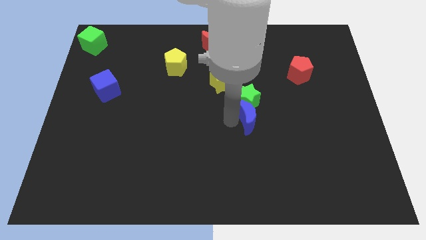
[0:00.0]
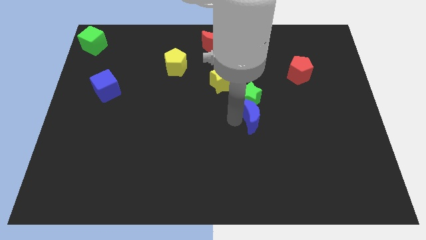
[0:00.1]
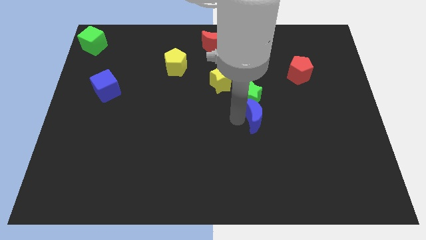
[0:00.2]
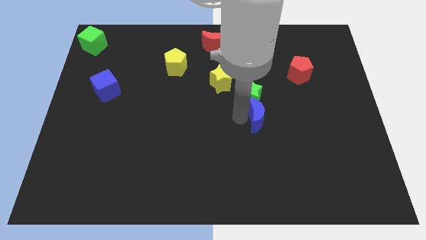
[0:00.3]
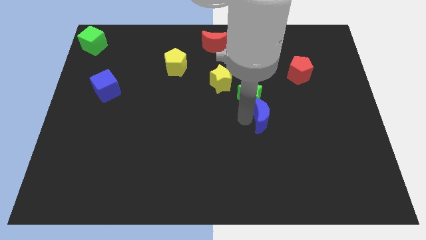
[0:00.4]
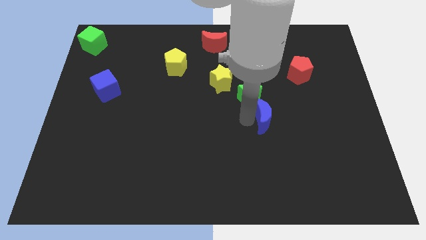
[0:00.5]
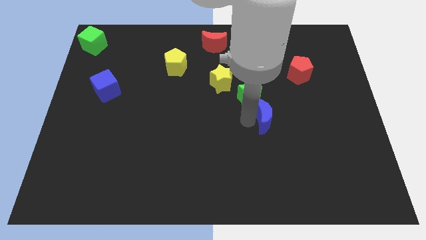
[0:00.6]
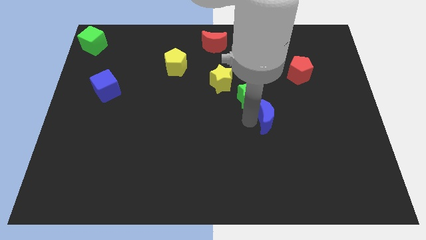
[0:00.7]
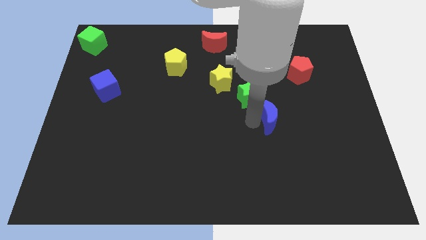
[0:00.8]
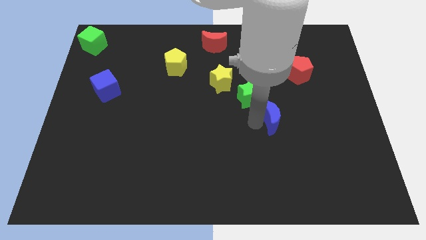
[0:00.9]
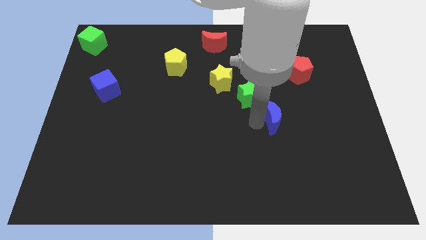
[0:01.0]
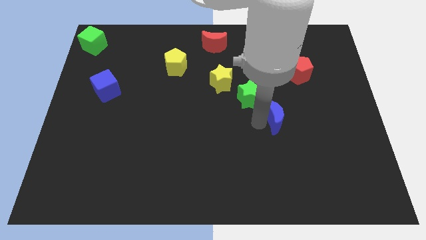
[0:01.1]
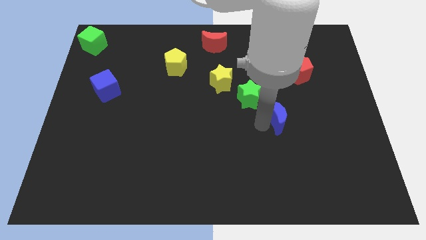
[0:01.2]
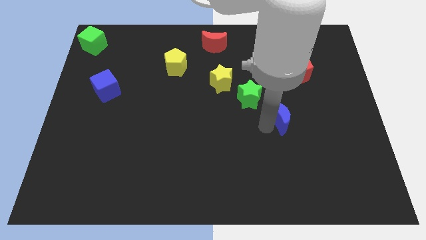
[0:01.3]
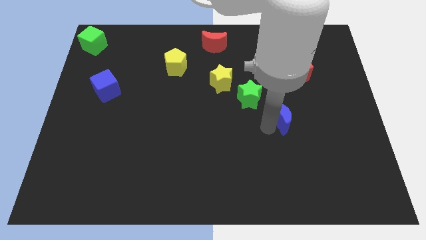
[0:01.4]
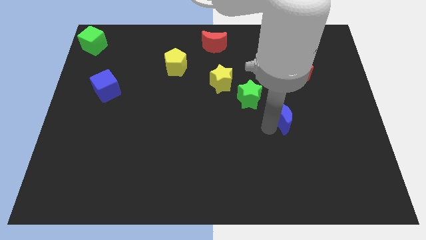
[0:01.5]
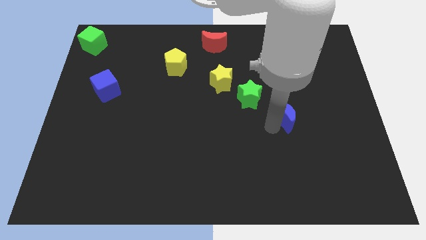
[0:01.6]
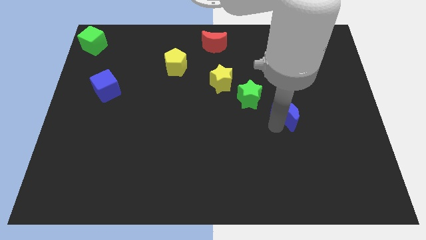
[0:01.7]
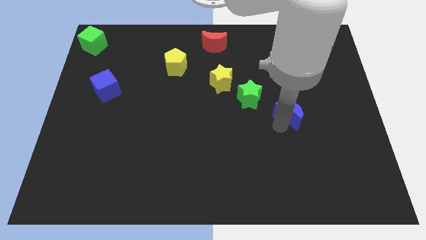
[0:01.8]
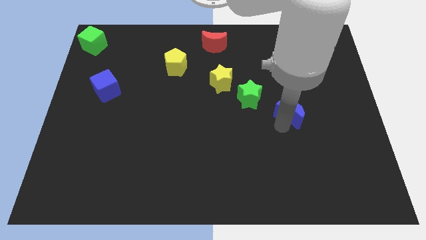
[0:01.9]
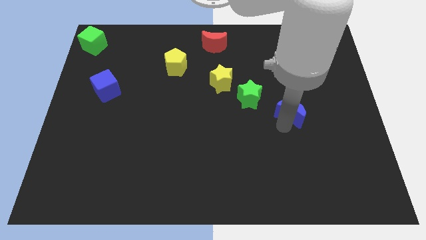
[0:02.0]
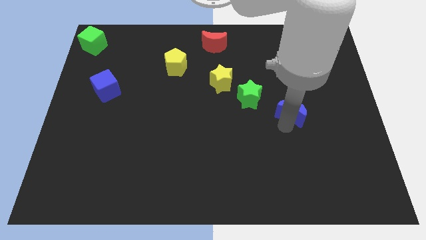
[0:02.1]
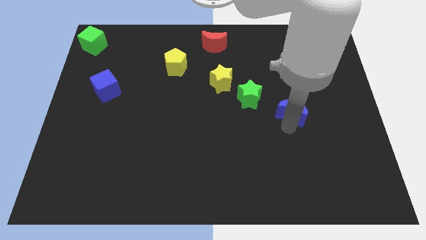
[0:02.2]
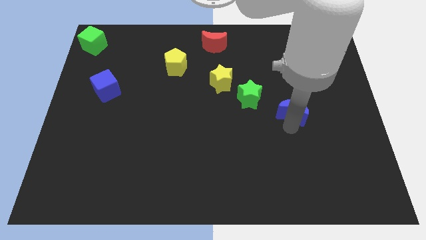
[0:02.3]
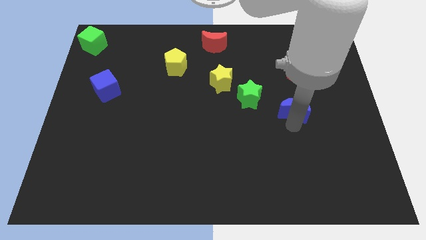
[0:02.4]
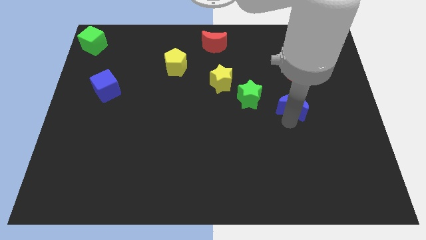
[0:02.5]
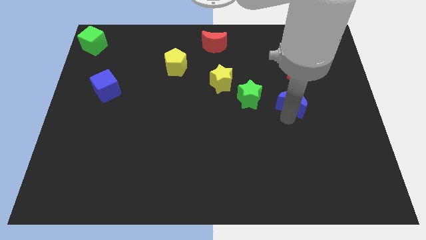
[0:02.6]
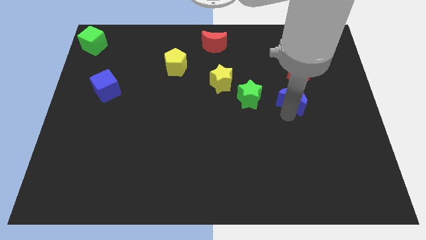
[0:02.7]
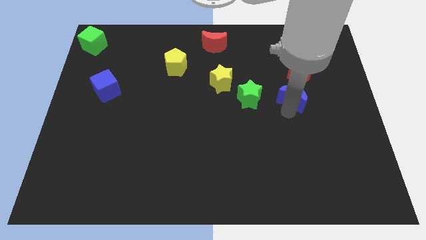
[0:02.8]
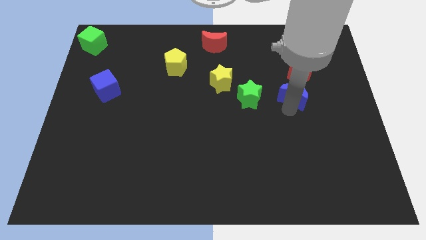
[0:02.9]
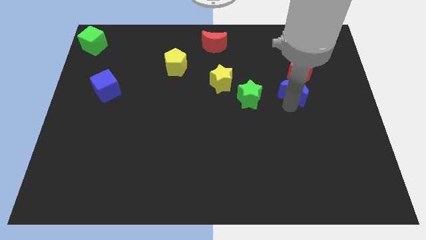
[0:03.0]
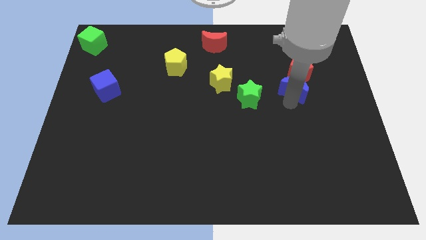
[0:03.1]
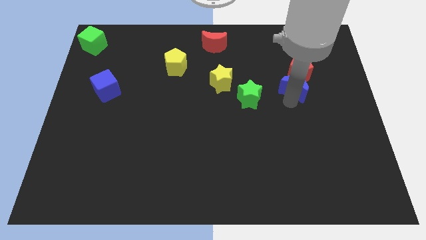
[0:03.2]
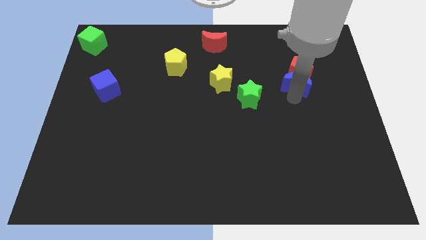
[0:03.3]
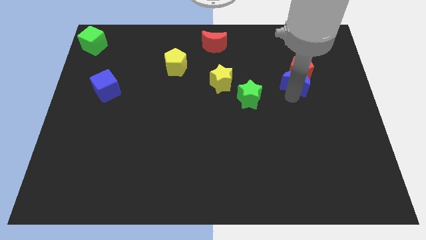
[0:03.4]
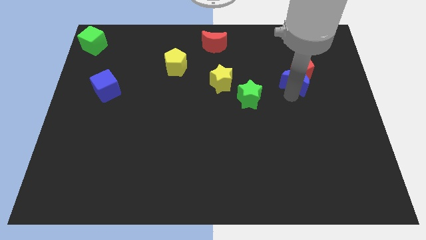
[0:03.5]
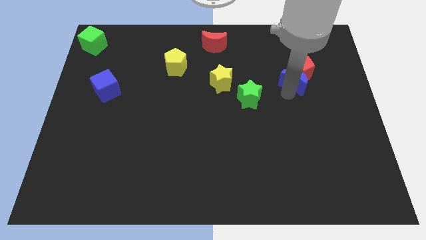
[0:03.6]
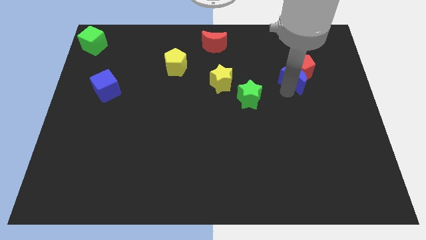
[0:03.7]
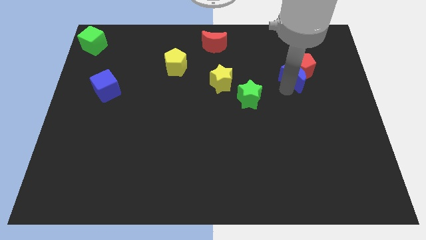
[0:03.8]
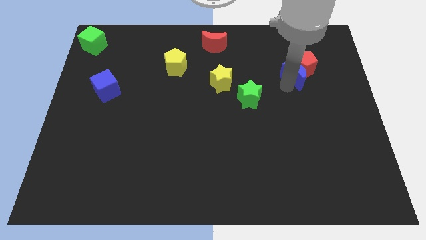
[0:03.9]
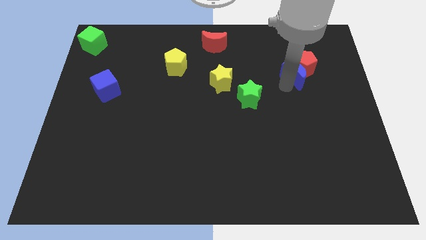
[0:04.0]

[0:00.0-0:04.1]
move the blue crescent into the bottom side of the red pentagon

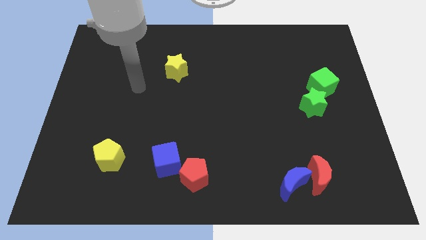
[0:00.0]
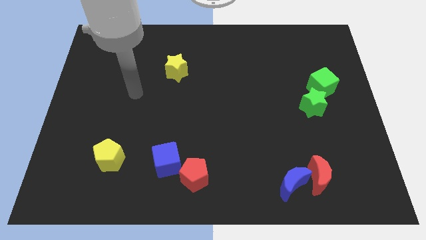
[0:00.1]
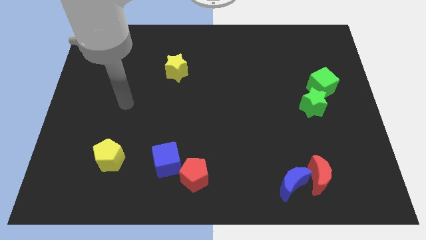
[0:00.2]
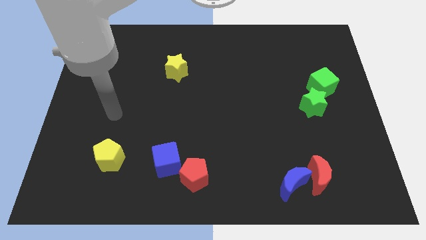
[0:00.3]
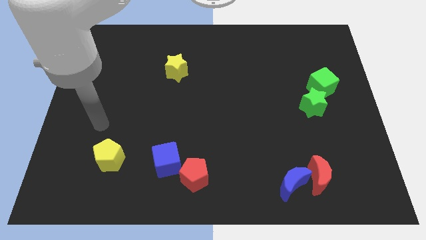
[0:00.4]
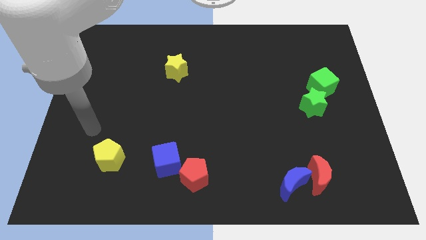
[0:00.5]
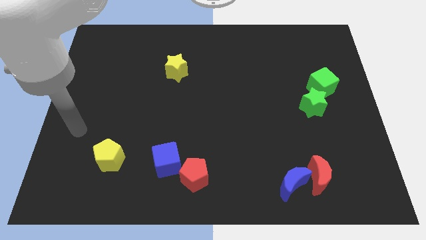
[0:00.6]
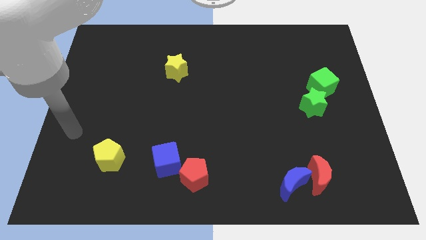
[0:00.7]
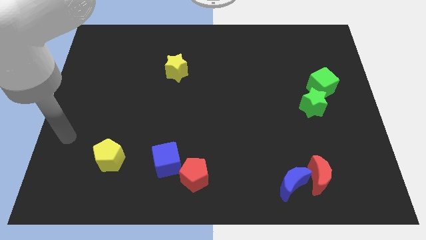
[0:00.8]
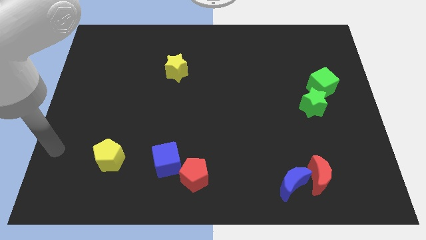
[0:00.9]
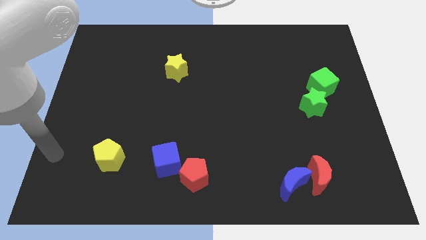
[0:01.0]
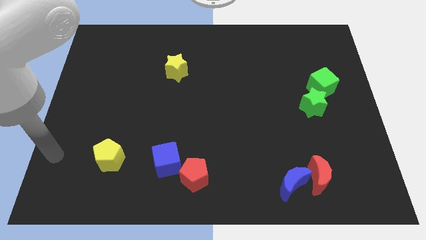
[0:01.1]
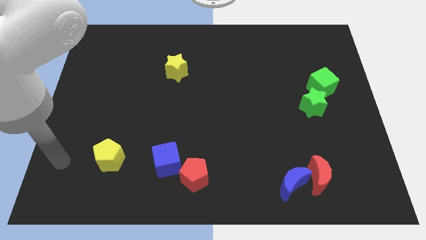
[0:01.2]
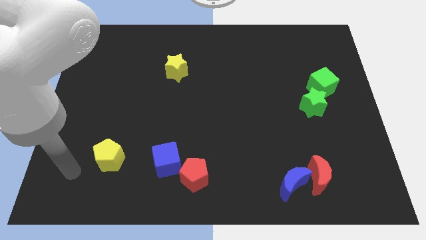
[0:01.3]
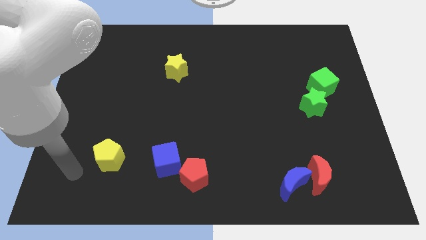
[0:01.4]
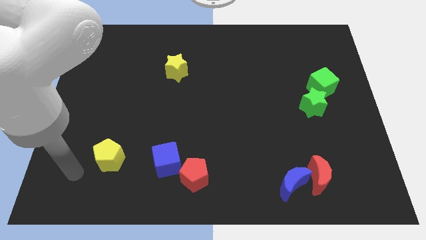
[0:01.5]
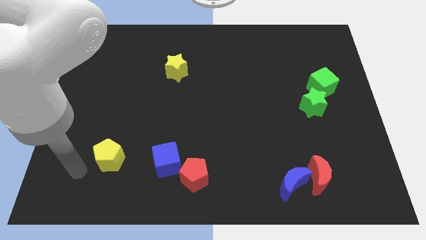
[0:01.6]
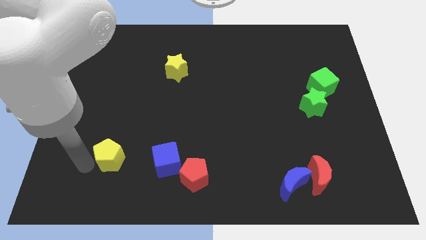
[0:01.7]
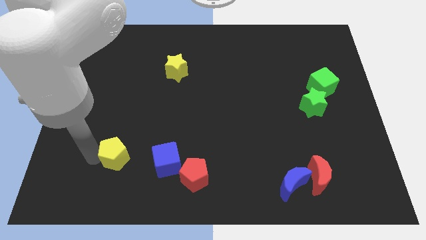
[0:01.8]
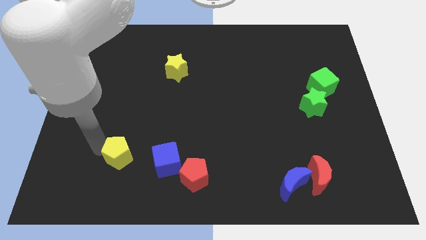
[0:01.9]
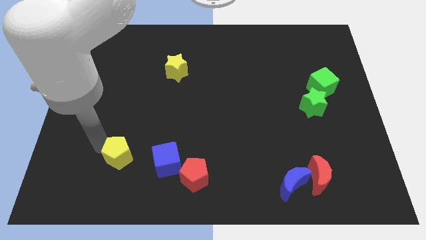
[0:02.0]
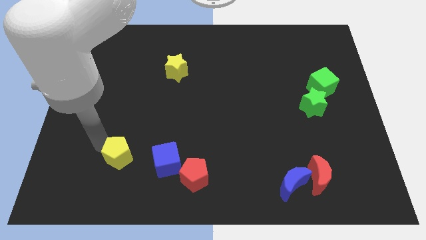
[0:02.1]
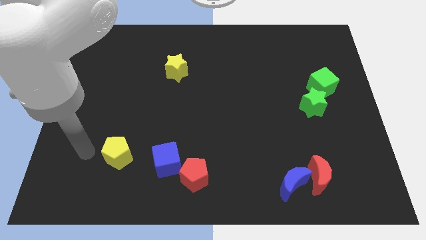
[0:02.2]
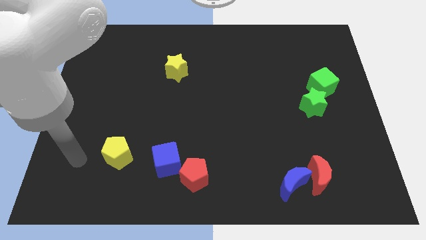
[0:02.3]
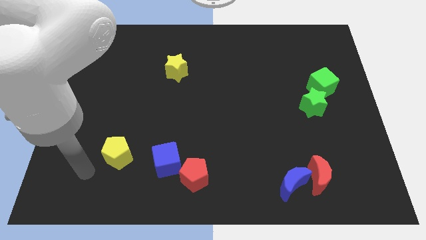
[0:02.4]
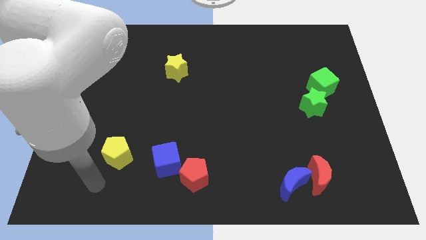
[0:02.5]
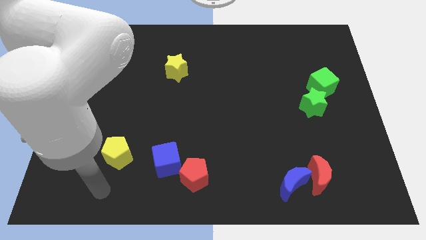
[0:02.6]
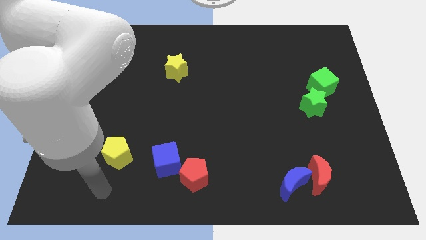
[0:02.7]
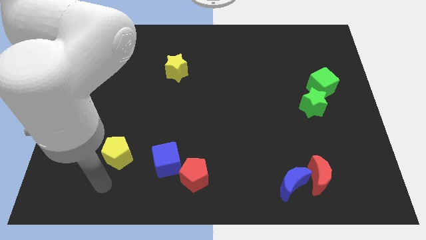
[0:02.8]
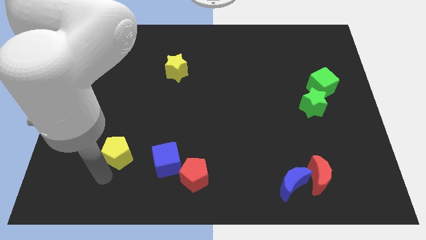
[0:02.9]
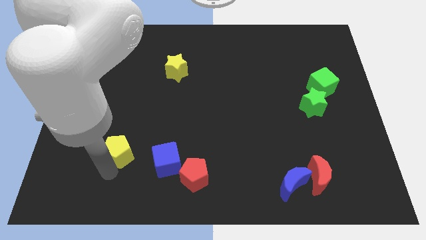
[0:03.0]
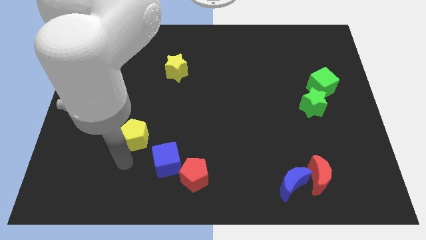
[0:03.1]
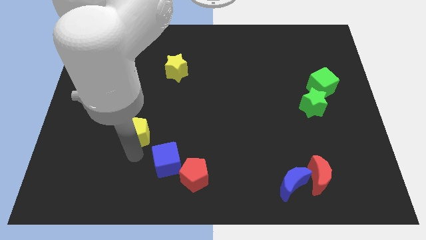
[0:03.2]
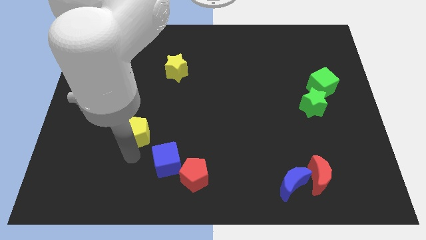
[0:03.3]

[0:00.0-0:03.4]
push the yellow pentagon to the top left of the blue cube

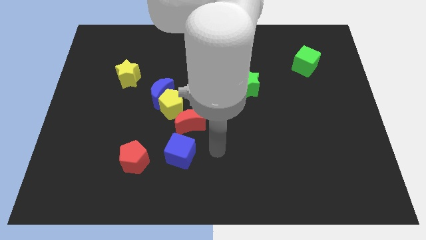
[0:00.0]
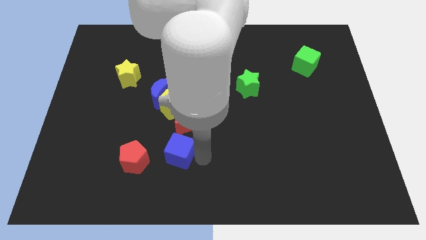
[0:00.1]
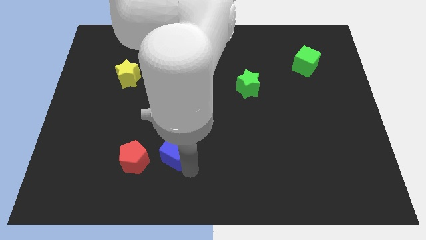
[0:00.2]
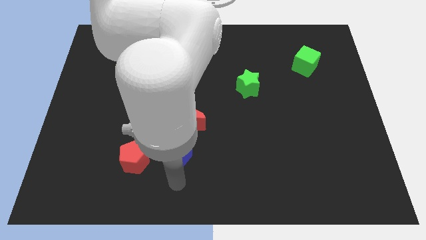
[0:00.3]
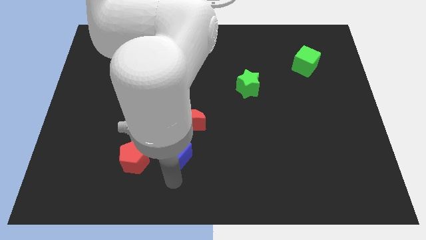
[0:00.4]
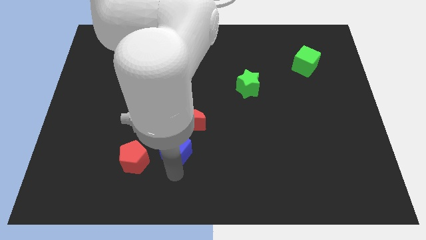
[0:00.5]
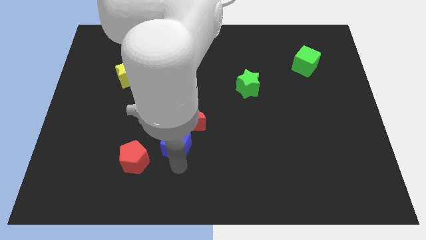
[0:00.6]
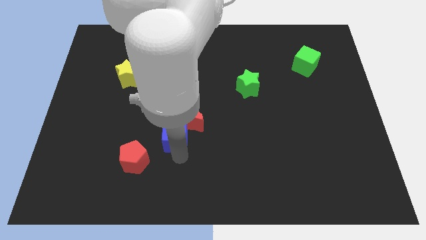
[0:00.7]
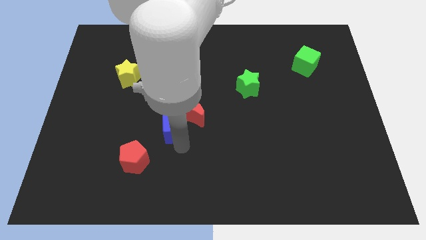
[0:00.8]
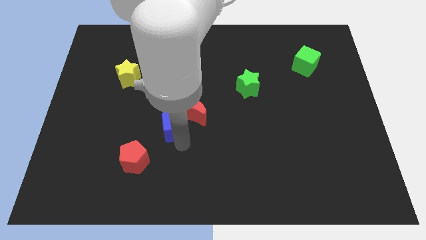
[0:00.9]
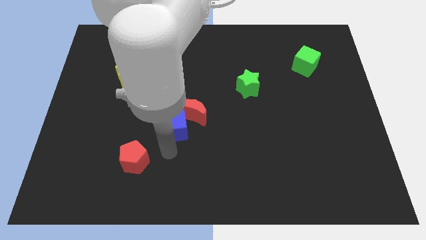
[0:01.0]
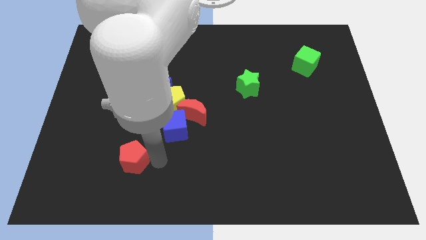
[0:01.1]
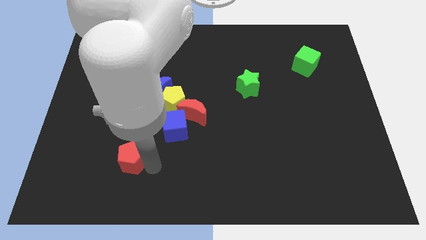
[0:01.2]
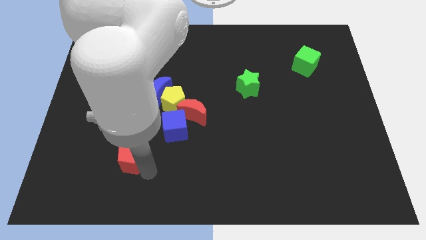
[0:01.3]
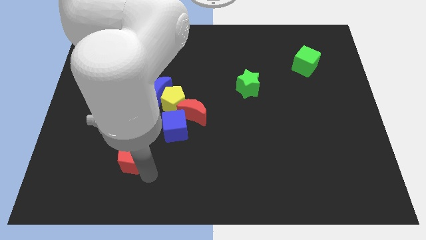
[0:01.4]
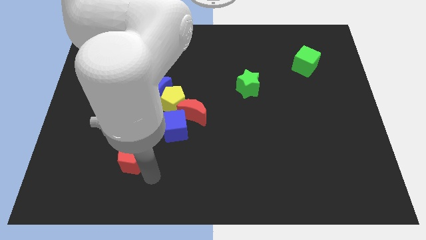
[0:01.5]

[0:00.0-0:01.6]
push blue cube into the red moon
